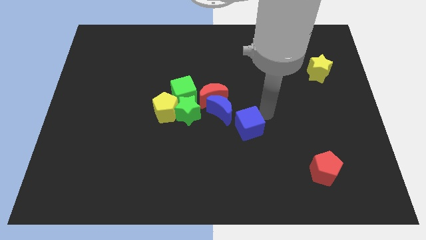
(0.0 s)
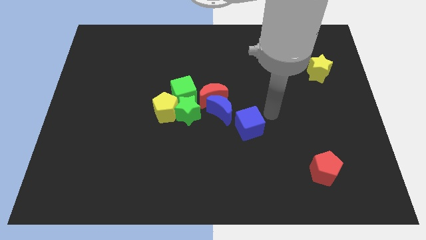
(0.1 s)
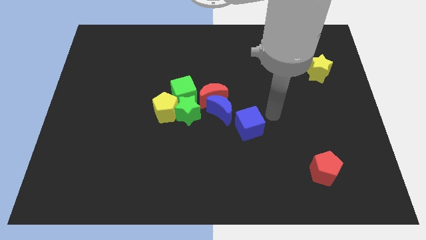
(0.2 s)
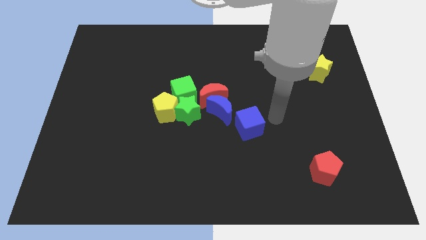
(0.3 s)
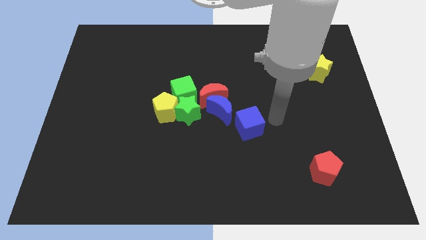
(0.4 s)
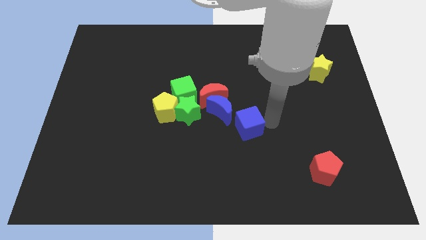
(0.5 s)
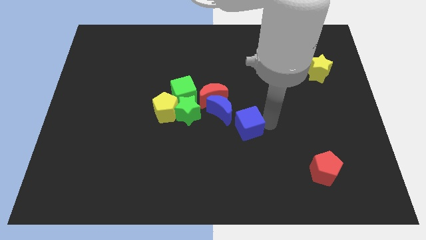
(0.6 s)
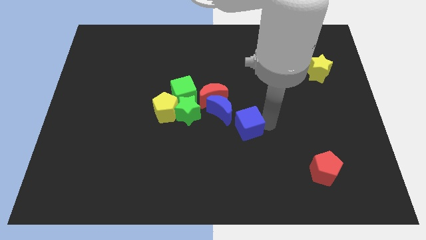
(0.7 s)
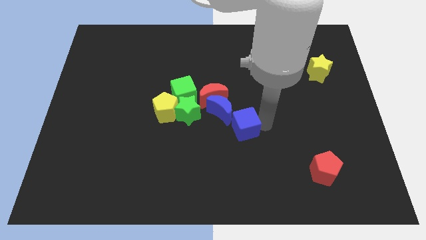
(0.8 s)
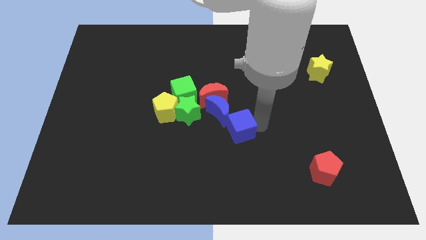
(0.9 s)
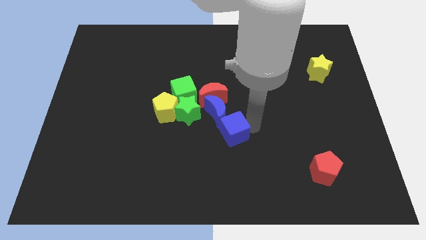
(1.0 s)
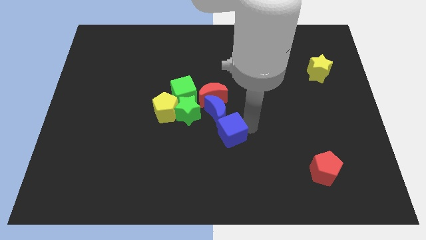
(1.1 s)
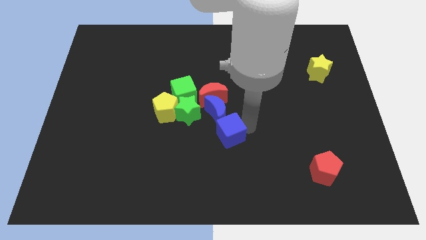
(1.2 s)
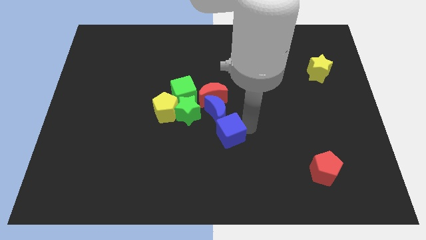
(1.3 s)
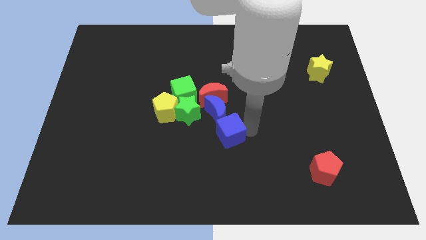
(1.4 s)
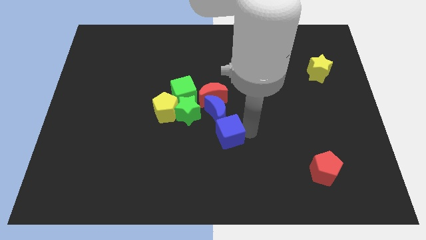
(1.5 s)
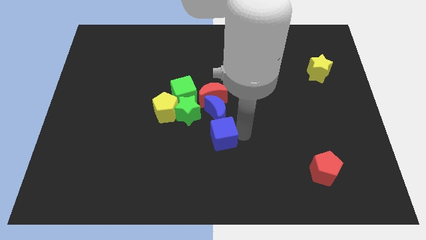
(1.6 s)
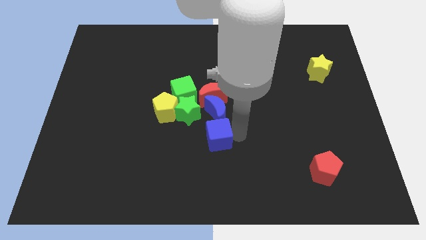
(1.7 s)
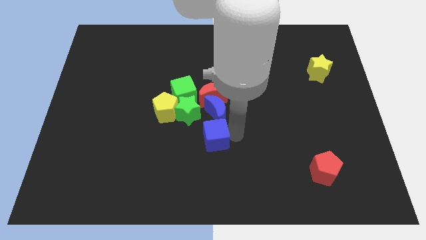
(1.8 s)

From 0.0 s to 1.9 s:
move the blue cube to the bottom of the blue crescent

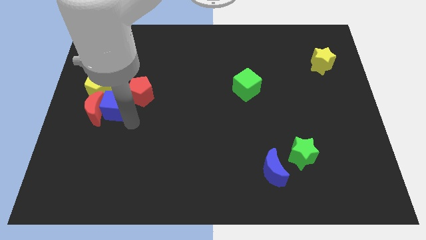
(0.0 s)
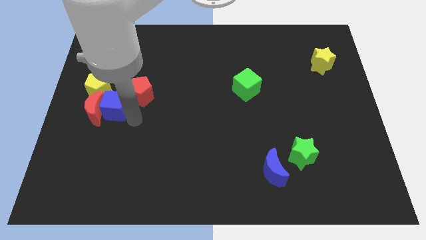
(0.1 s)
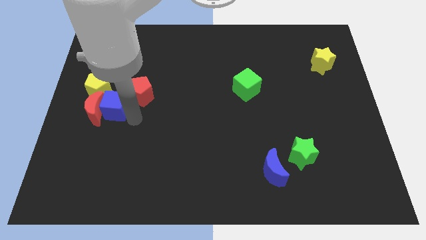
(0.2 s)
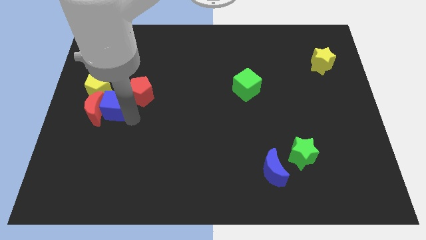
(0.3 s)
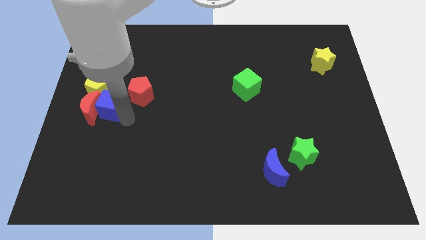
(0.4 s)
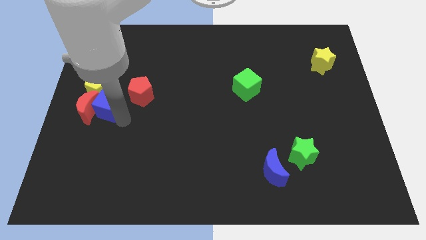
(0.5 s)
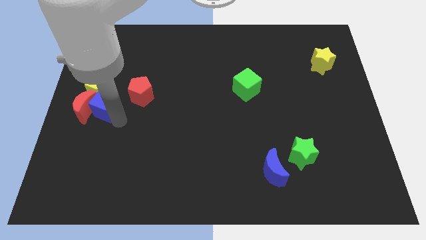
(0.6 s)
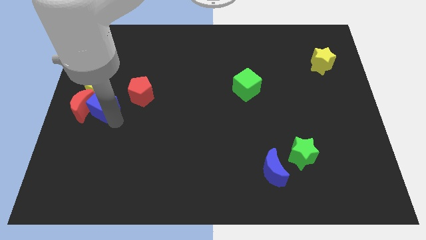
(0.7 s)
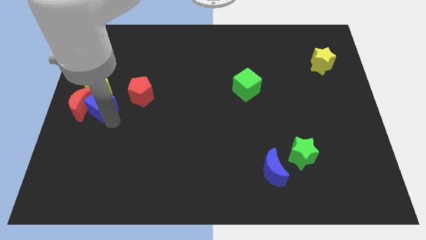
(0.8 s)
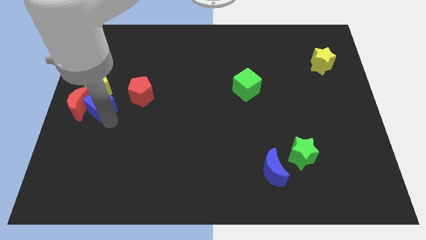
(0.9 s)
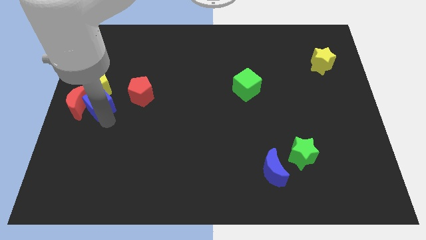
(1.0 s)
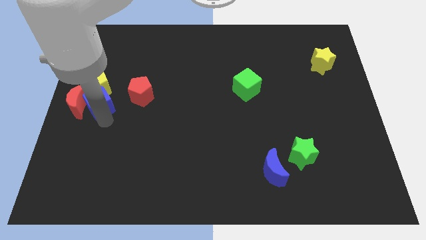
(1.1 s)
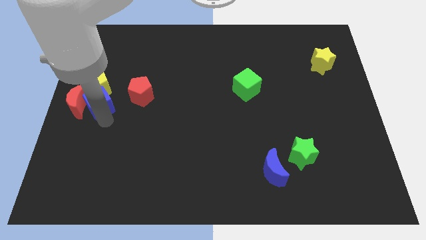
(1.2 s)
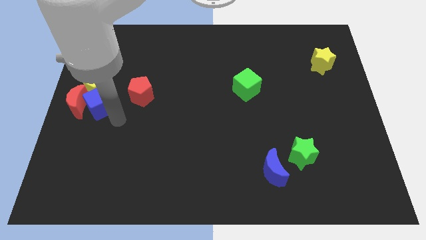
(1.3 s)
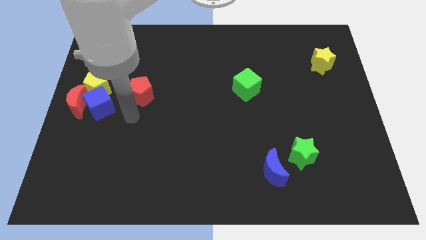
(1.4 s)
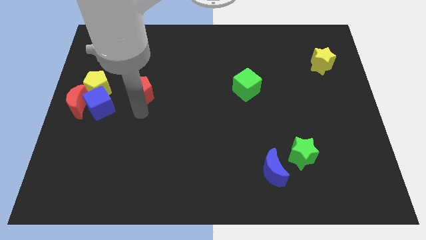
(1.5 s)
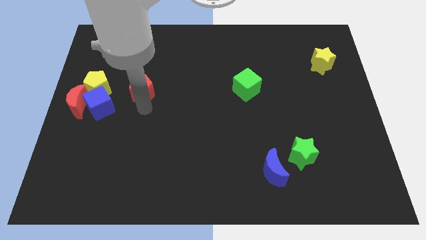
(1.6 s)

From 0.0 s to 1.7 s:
move the red crescent with the blue cube towards the left center of the board

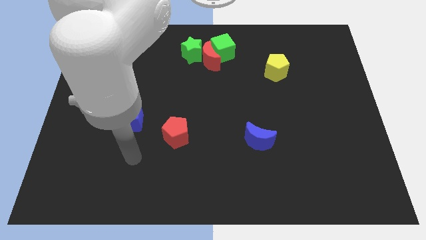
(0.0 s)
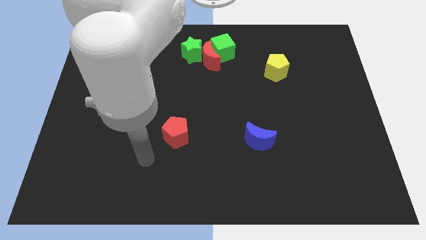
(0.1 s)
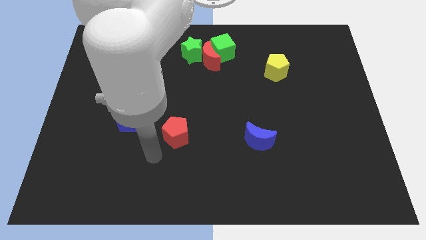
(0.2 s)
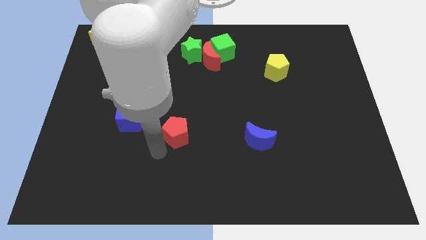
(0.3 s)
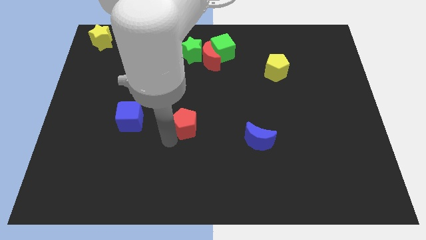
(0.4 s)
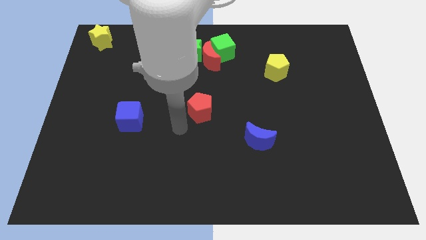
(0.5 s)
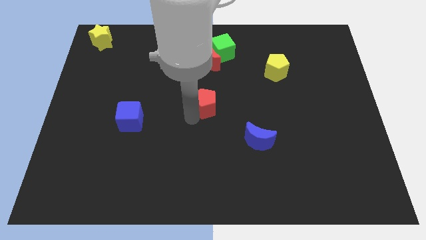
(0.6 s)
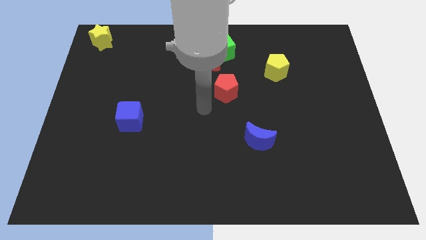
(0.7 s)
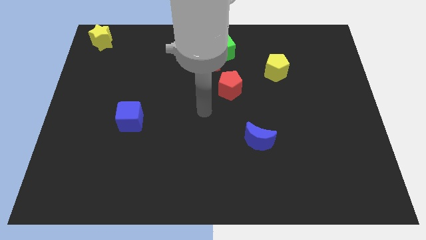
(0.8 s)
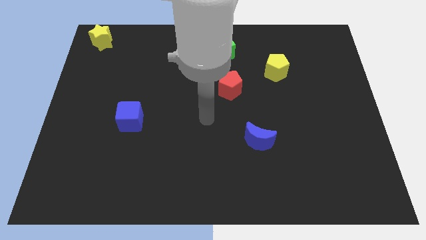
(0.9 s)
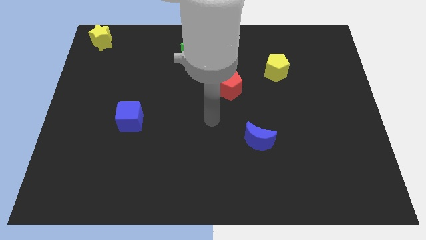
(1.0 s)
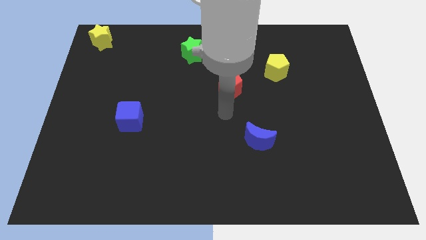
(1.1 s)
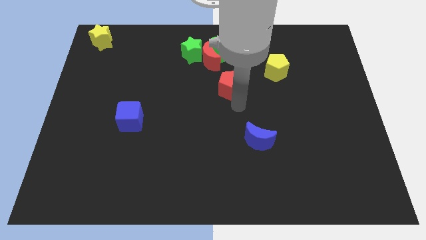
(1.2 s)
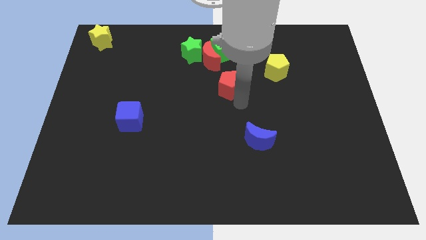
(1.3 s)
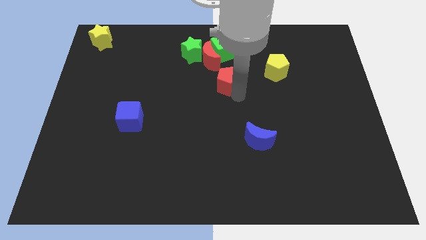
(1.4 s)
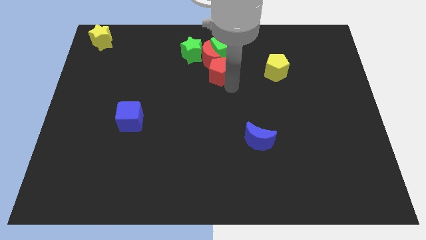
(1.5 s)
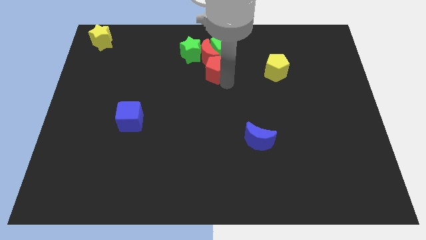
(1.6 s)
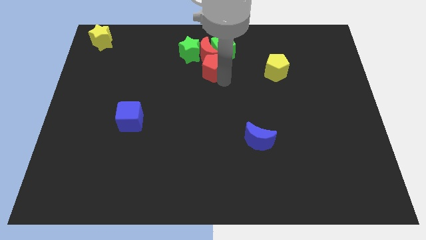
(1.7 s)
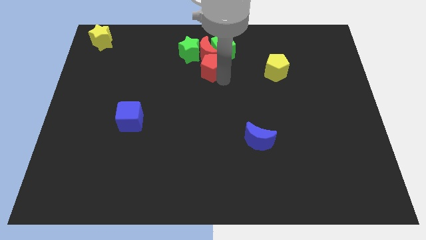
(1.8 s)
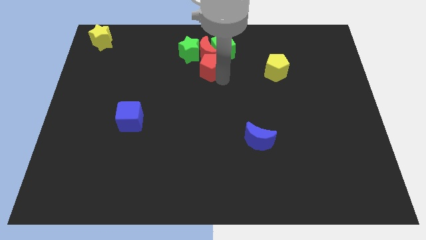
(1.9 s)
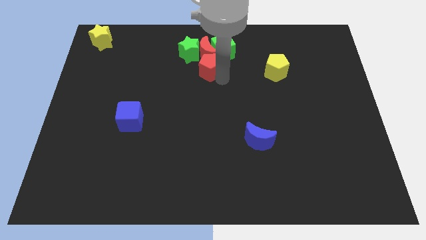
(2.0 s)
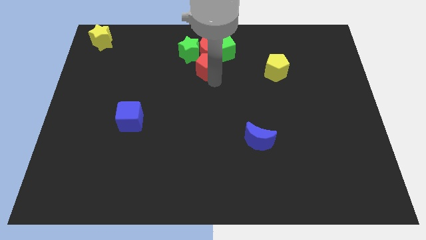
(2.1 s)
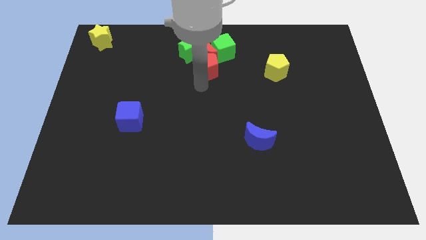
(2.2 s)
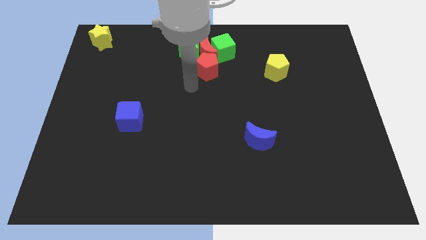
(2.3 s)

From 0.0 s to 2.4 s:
place the red pentagon below into the red crescent

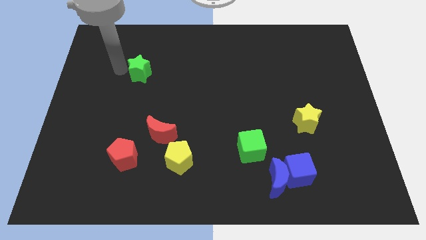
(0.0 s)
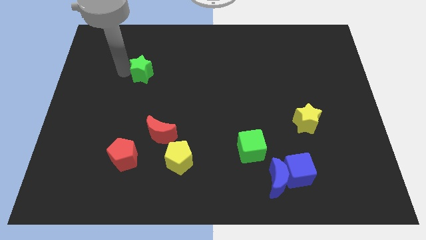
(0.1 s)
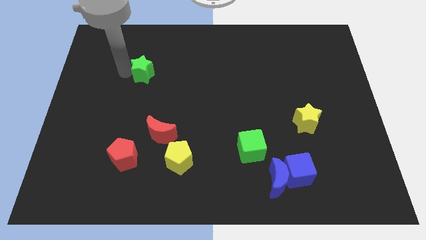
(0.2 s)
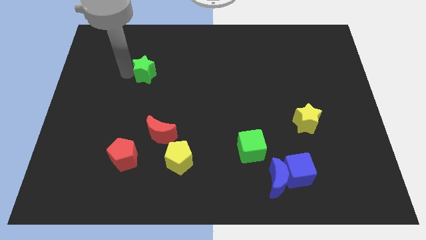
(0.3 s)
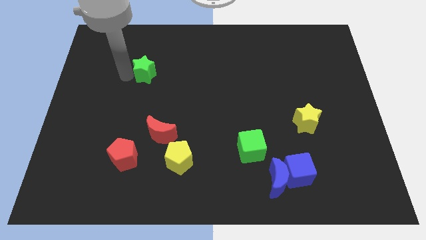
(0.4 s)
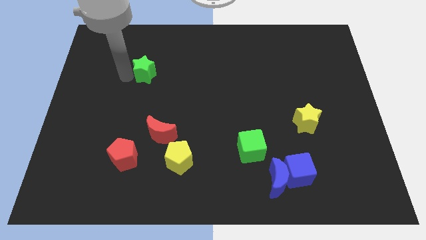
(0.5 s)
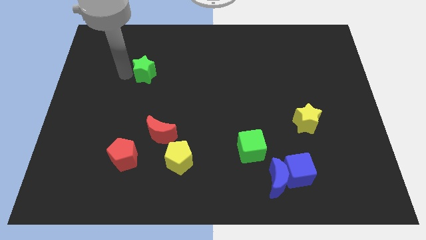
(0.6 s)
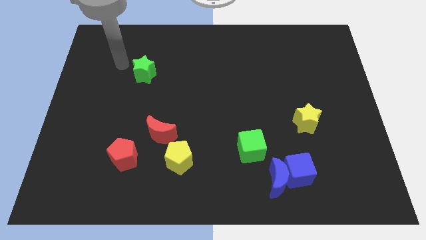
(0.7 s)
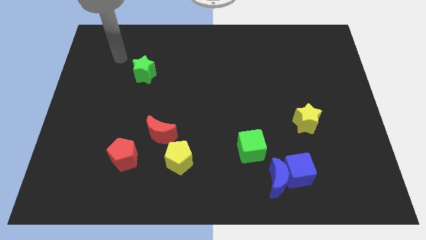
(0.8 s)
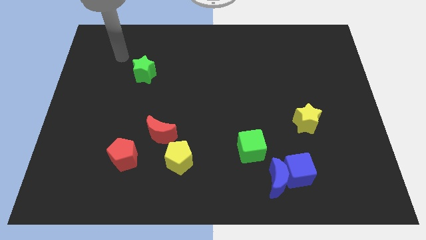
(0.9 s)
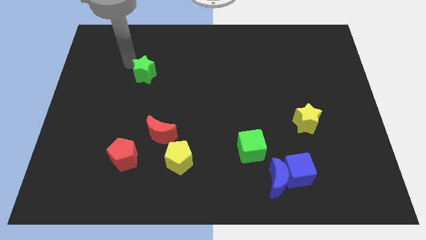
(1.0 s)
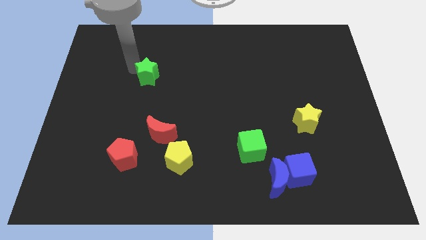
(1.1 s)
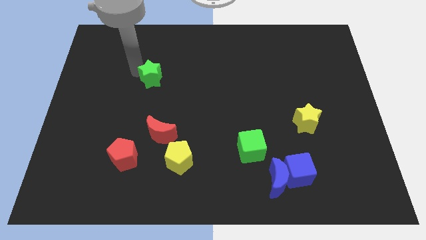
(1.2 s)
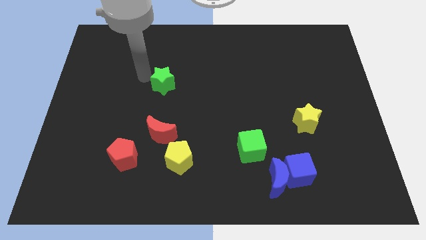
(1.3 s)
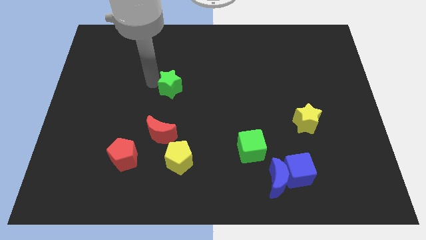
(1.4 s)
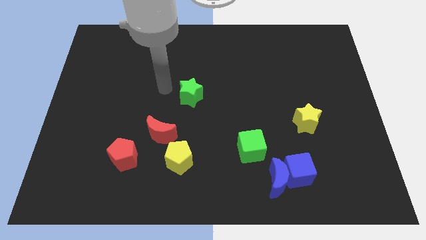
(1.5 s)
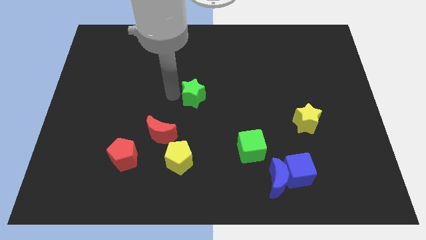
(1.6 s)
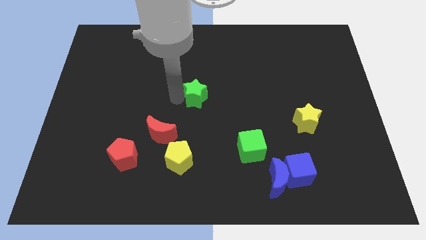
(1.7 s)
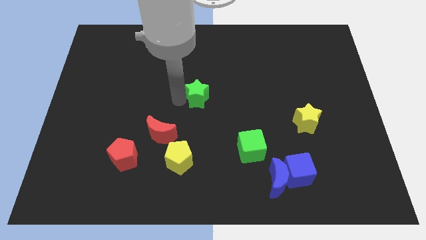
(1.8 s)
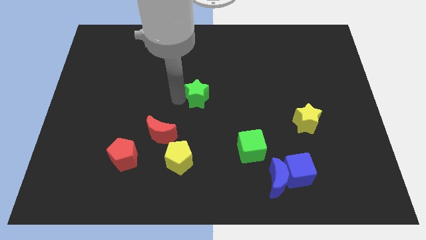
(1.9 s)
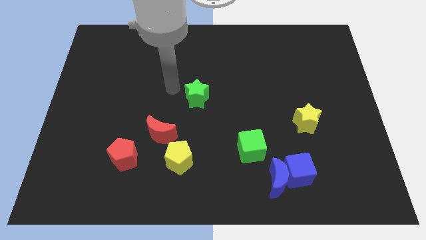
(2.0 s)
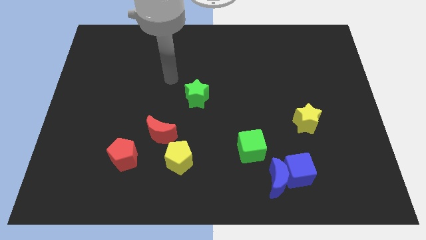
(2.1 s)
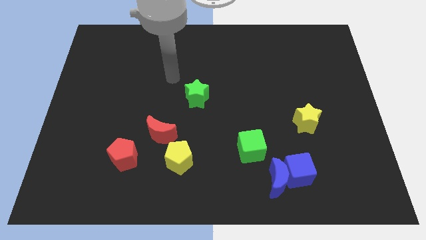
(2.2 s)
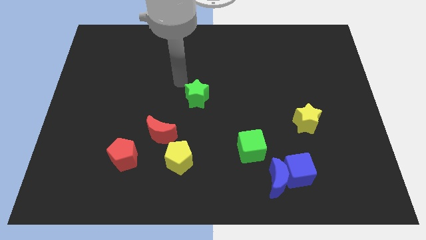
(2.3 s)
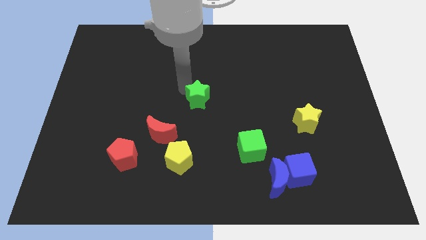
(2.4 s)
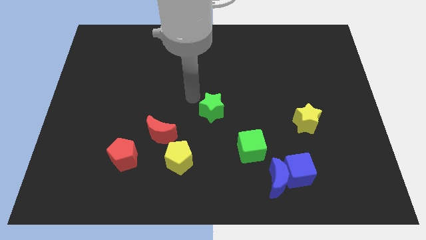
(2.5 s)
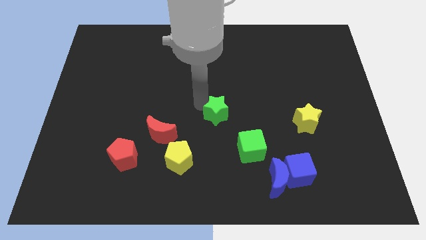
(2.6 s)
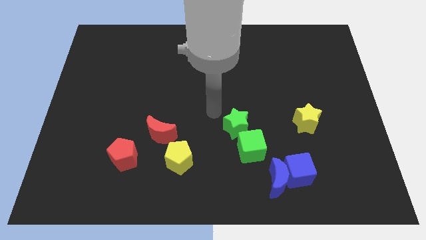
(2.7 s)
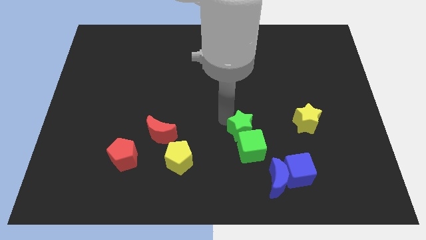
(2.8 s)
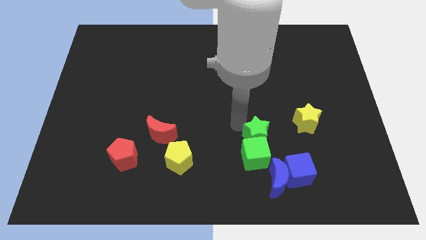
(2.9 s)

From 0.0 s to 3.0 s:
place the green star on the top of green cube
